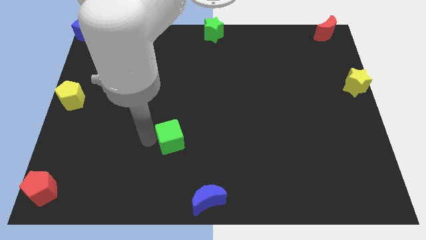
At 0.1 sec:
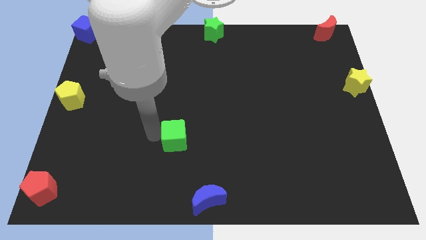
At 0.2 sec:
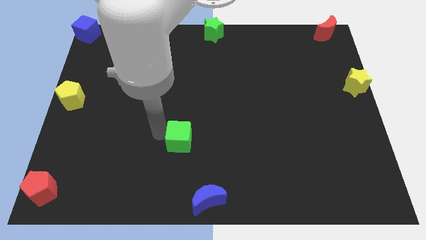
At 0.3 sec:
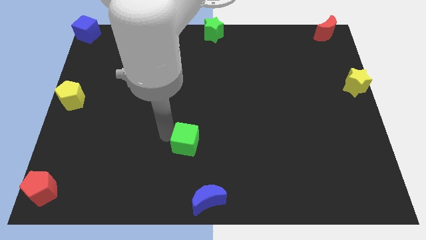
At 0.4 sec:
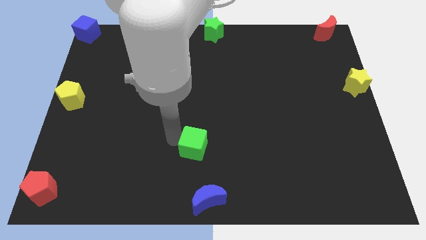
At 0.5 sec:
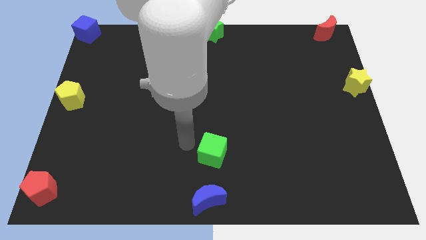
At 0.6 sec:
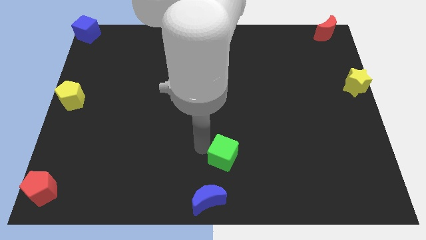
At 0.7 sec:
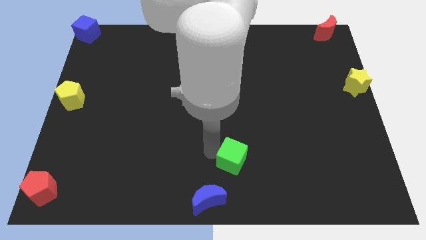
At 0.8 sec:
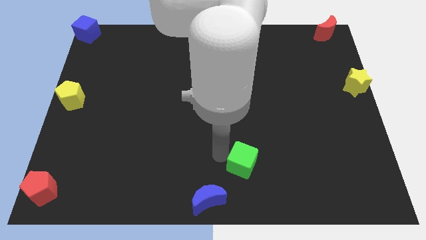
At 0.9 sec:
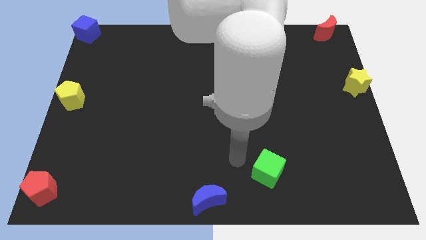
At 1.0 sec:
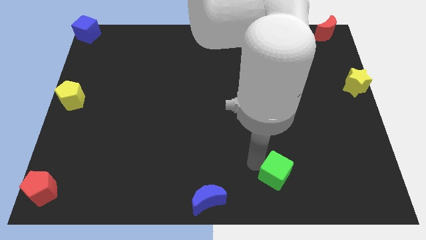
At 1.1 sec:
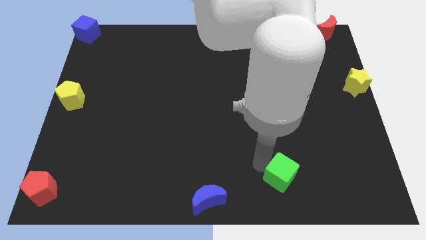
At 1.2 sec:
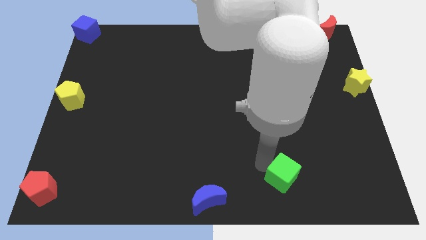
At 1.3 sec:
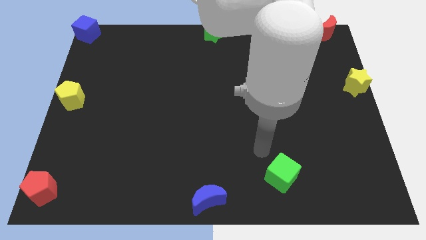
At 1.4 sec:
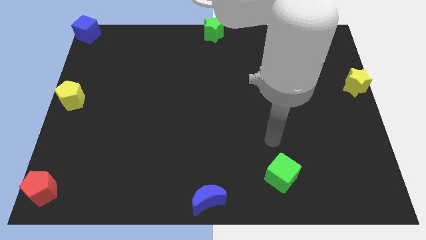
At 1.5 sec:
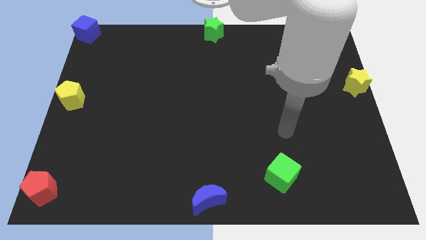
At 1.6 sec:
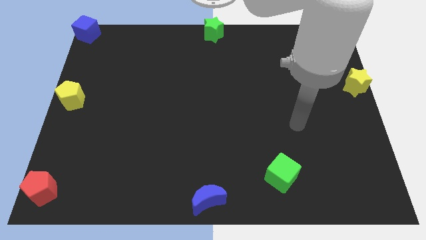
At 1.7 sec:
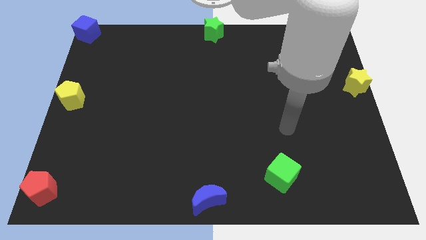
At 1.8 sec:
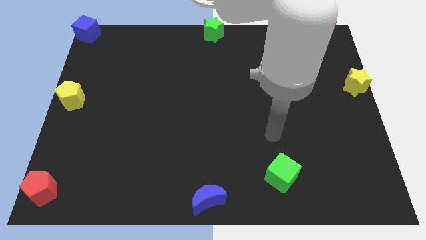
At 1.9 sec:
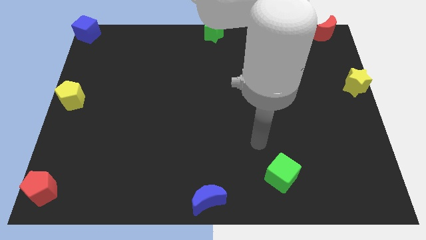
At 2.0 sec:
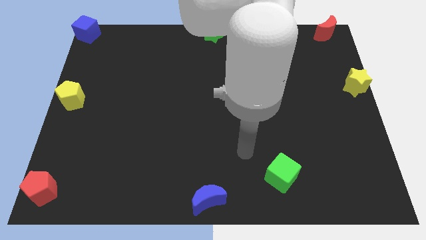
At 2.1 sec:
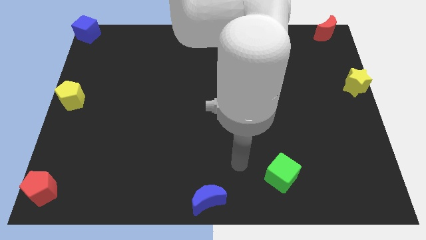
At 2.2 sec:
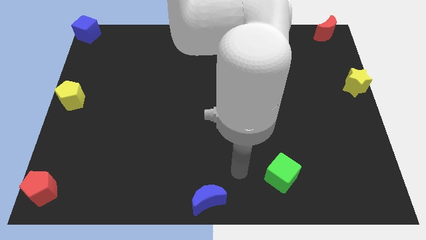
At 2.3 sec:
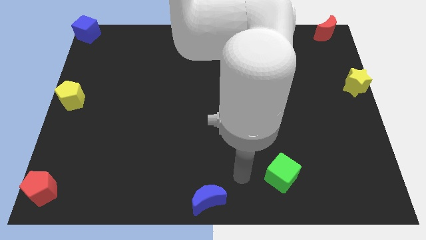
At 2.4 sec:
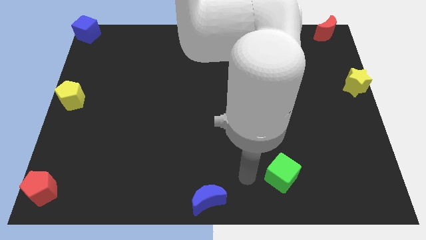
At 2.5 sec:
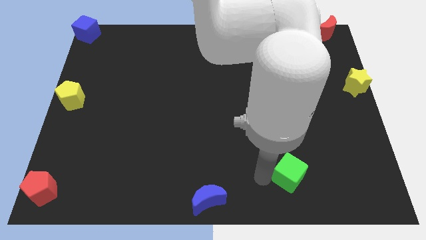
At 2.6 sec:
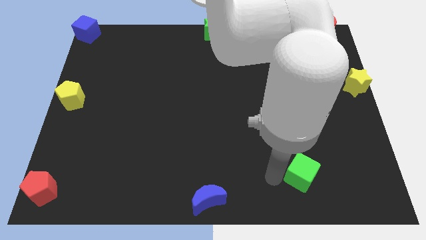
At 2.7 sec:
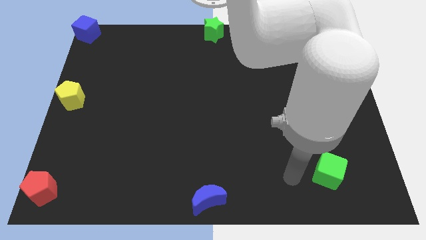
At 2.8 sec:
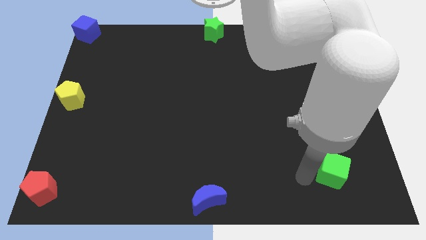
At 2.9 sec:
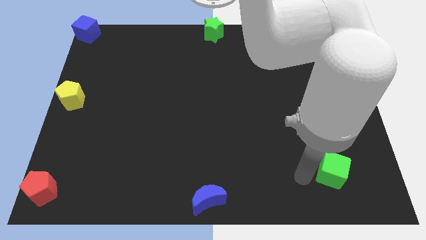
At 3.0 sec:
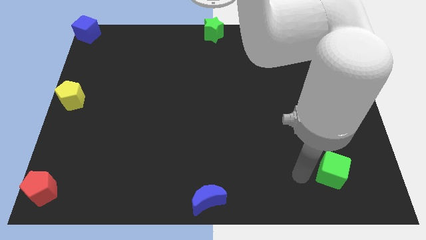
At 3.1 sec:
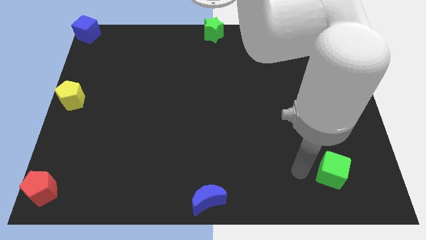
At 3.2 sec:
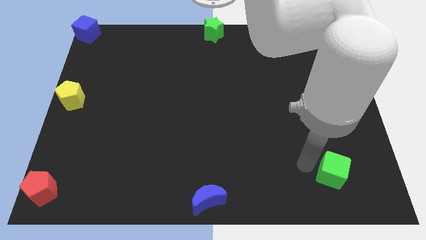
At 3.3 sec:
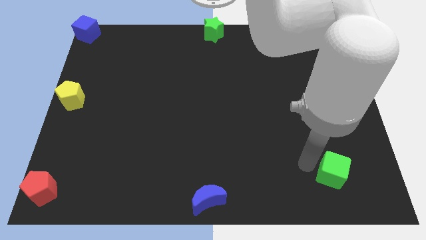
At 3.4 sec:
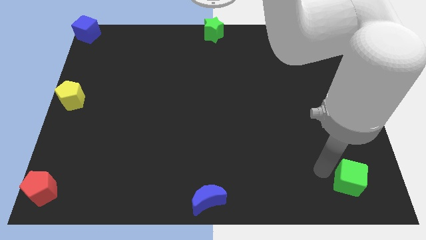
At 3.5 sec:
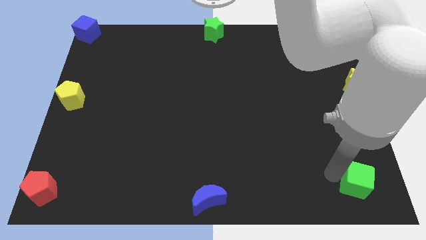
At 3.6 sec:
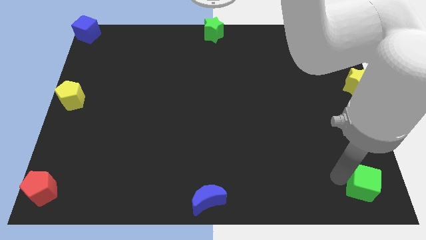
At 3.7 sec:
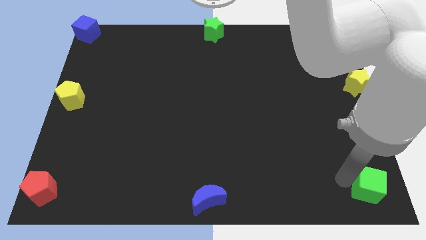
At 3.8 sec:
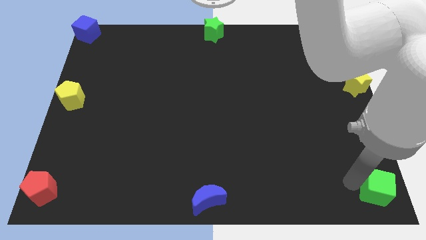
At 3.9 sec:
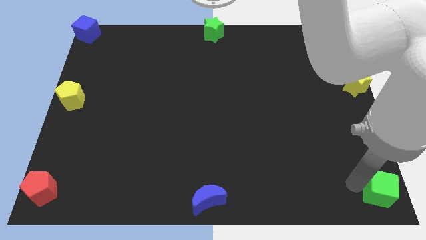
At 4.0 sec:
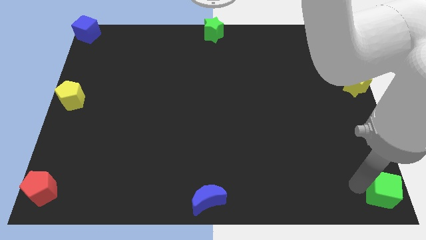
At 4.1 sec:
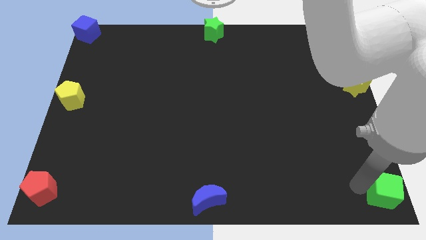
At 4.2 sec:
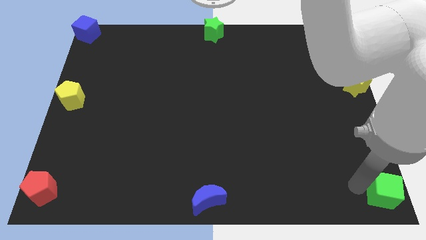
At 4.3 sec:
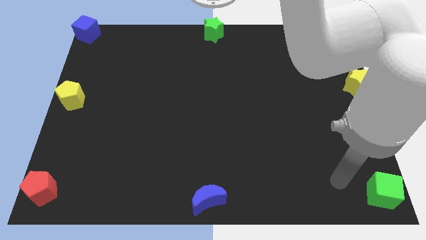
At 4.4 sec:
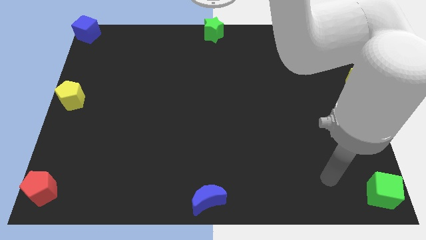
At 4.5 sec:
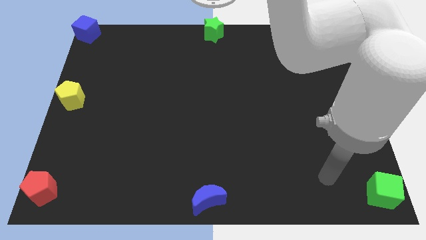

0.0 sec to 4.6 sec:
slide the green cube to the bottom right corner of the board

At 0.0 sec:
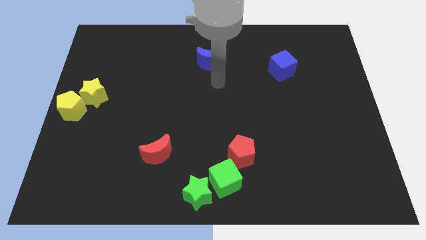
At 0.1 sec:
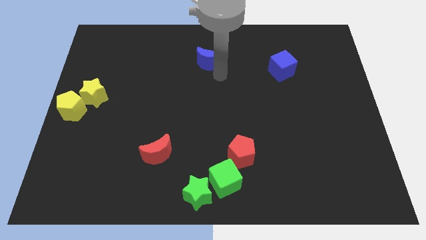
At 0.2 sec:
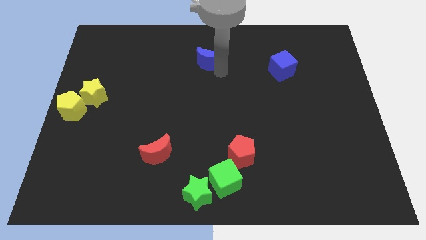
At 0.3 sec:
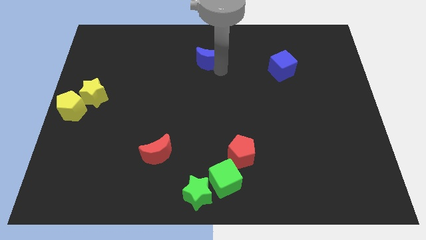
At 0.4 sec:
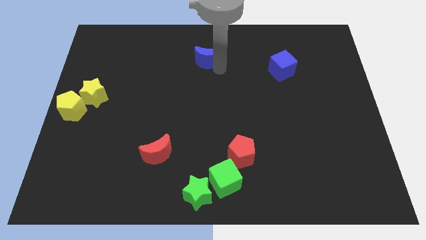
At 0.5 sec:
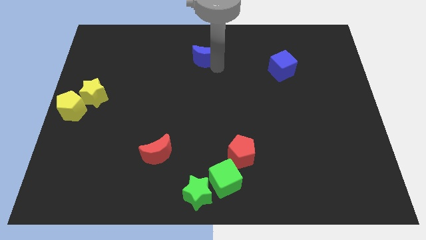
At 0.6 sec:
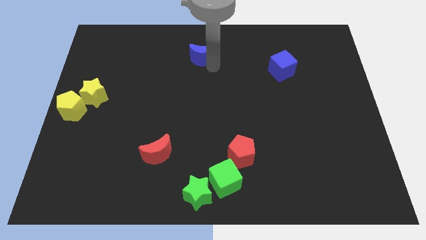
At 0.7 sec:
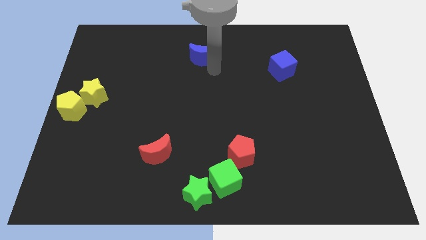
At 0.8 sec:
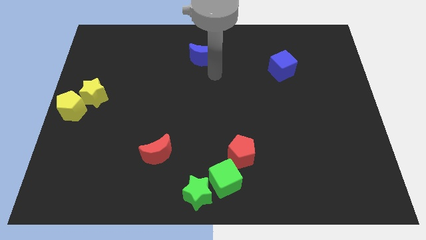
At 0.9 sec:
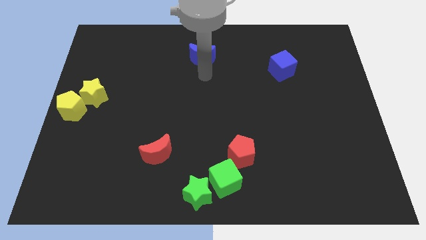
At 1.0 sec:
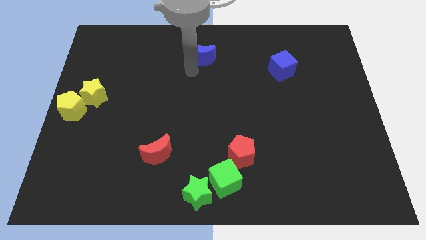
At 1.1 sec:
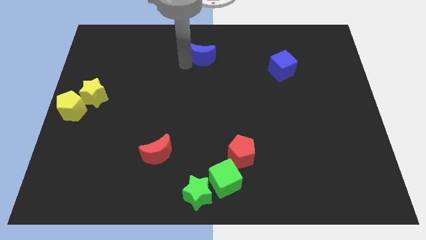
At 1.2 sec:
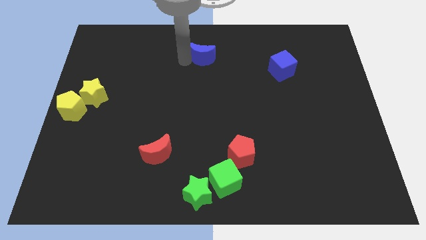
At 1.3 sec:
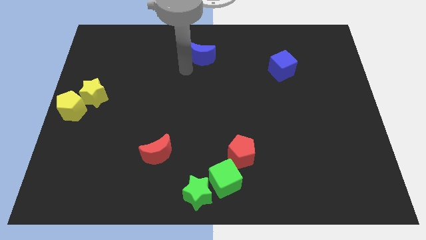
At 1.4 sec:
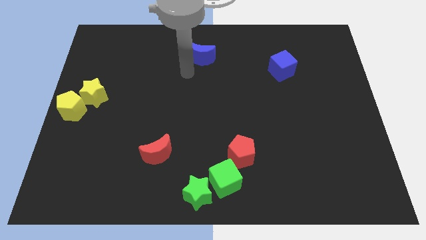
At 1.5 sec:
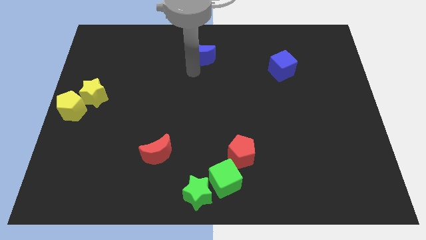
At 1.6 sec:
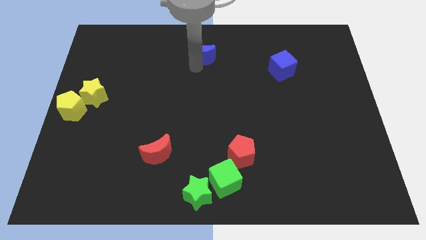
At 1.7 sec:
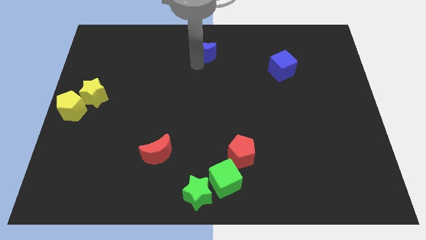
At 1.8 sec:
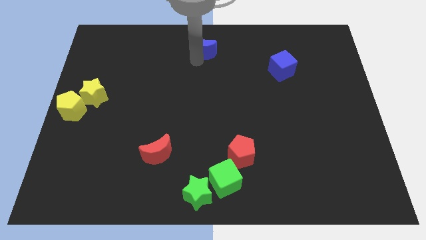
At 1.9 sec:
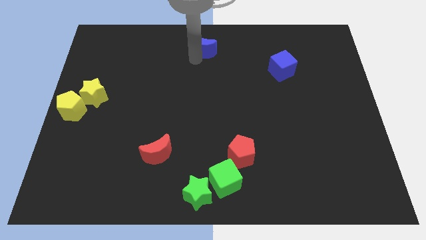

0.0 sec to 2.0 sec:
place the blue moon diagonally top left to the blue cube

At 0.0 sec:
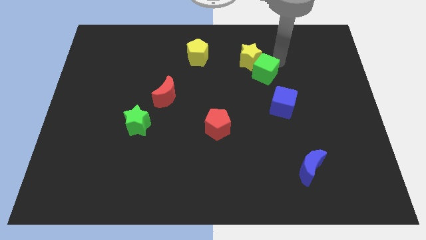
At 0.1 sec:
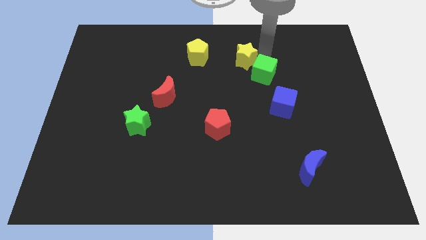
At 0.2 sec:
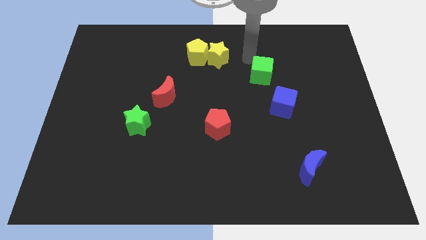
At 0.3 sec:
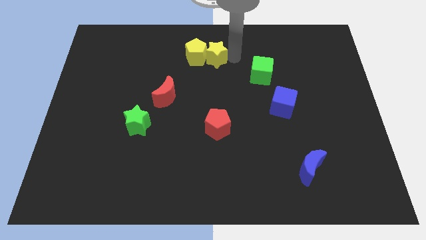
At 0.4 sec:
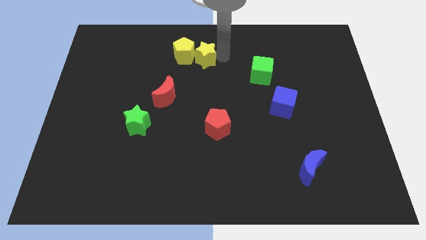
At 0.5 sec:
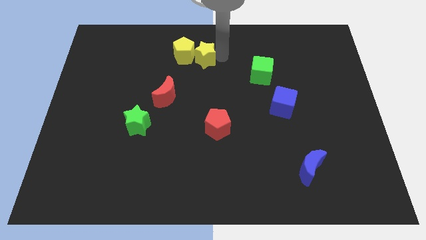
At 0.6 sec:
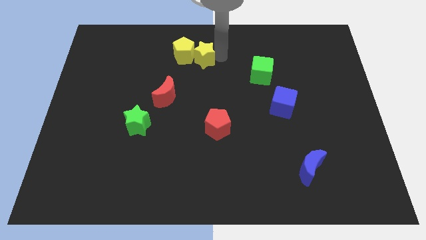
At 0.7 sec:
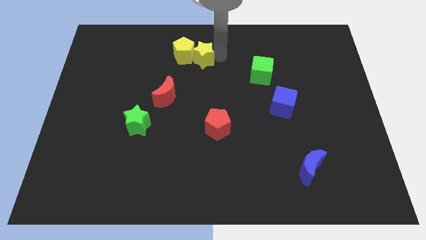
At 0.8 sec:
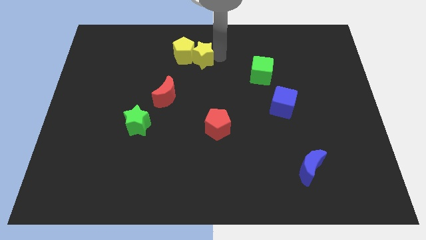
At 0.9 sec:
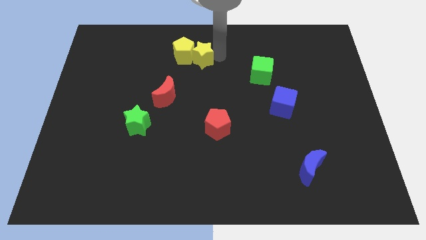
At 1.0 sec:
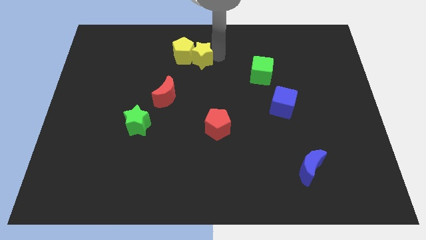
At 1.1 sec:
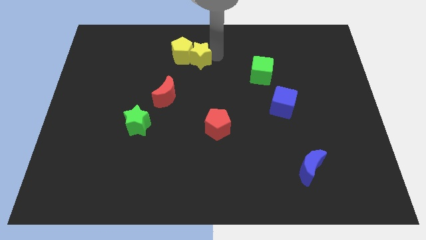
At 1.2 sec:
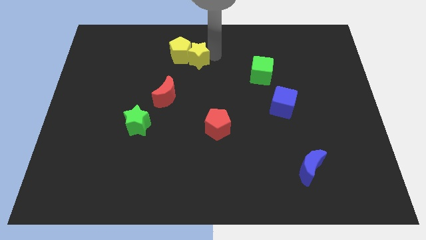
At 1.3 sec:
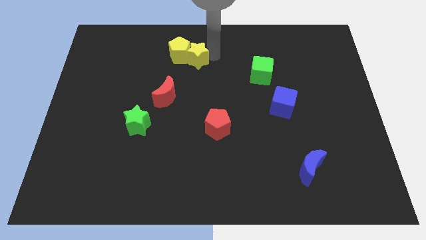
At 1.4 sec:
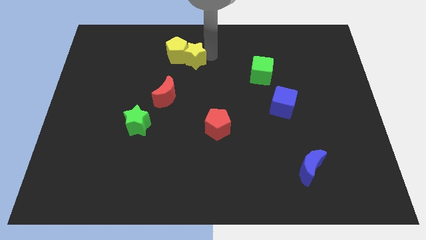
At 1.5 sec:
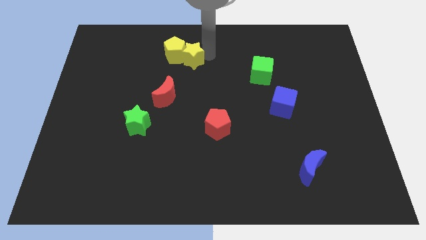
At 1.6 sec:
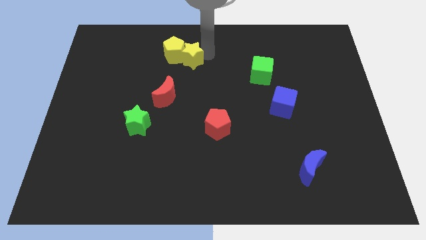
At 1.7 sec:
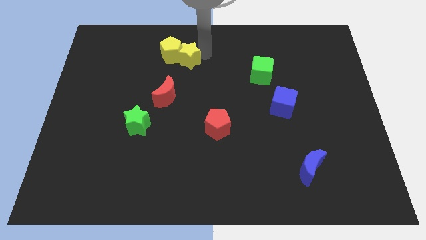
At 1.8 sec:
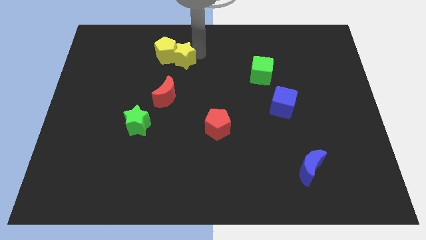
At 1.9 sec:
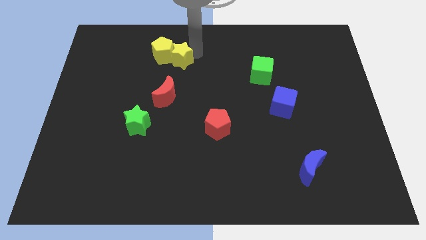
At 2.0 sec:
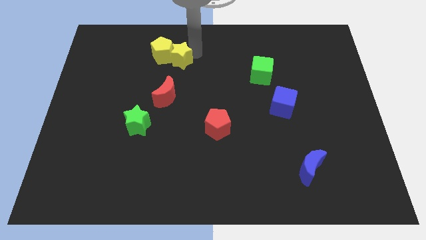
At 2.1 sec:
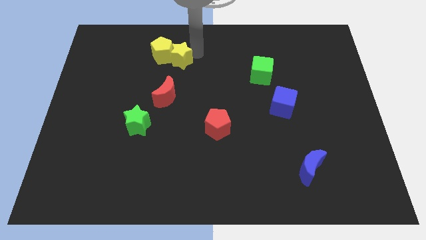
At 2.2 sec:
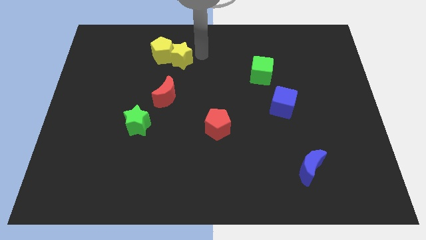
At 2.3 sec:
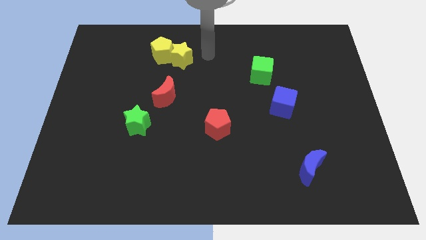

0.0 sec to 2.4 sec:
move the yellow blocks above the red moon

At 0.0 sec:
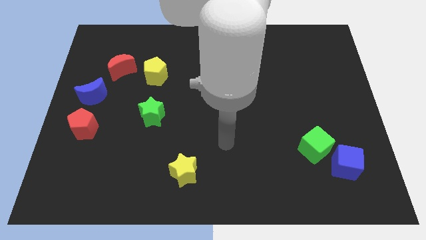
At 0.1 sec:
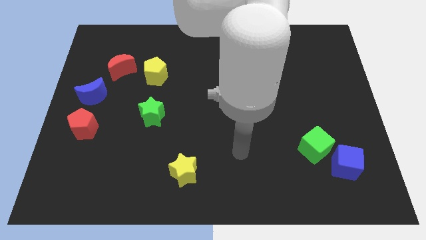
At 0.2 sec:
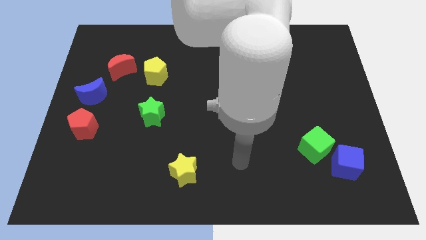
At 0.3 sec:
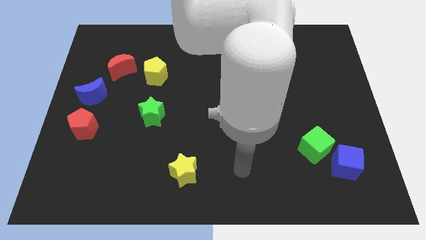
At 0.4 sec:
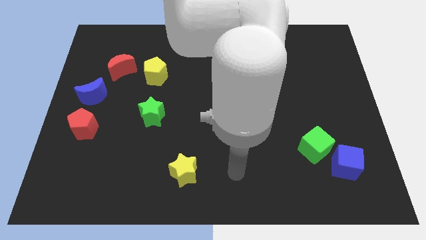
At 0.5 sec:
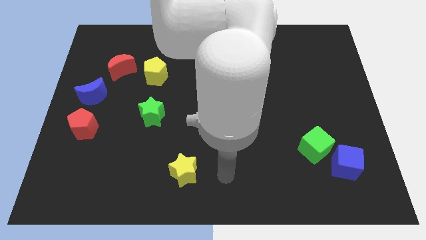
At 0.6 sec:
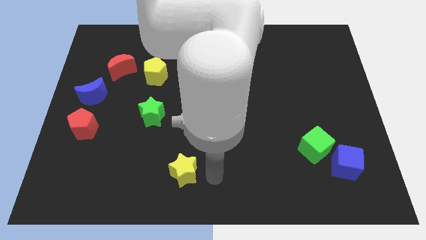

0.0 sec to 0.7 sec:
point your arm to the right side of yellow star
